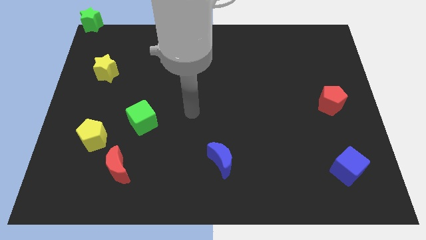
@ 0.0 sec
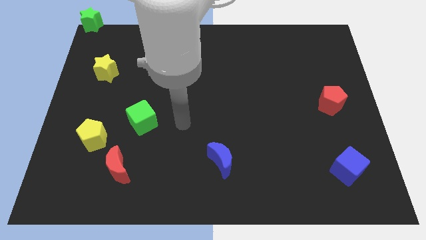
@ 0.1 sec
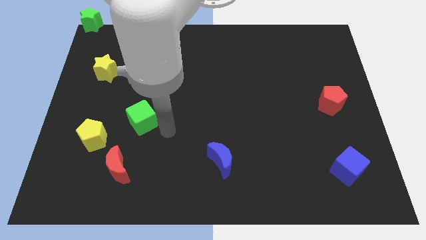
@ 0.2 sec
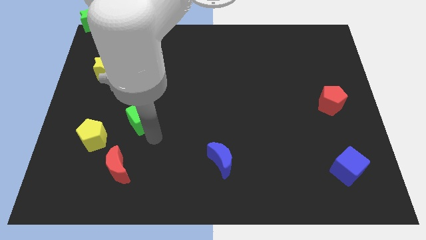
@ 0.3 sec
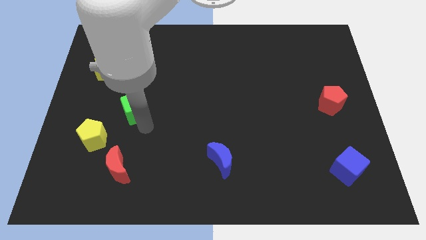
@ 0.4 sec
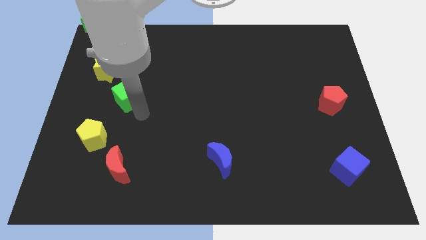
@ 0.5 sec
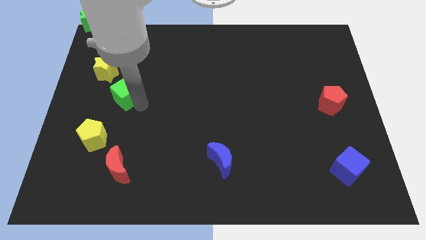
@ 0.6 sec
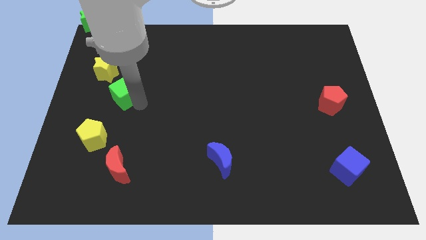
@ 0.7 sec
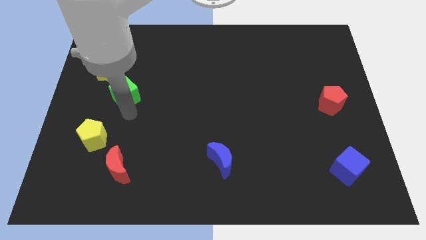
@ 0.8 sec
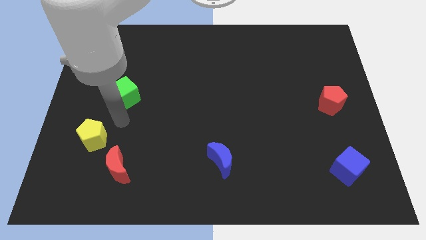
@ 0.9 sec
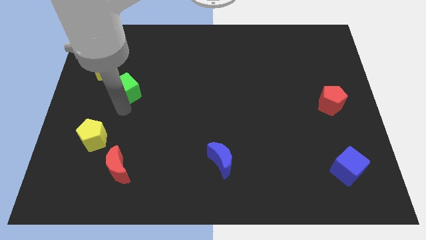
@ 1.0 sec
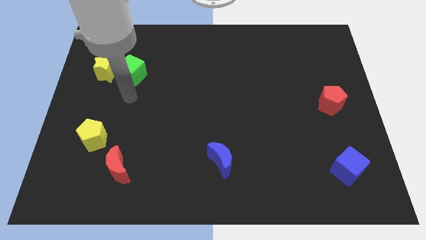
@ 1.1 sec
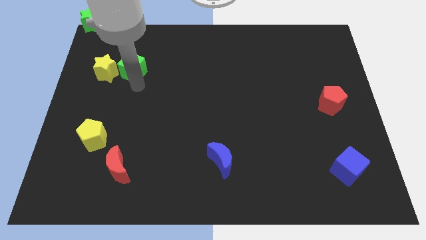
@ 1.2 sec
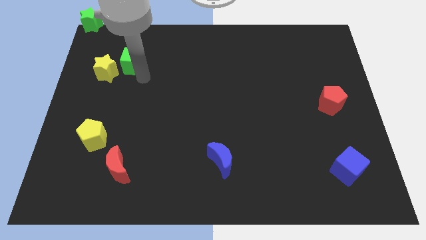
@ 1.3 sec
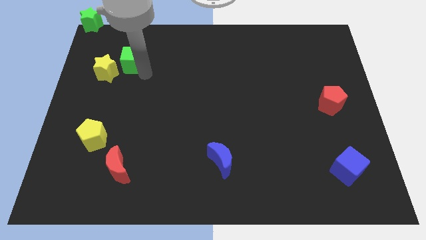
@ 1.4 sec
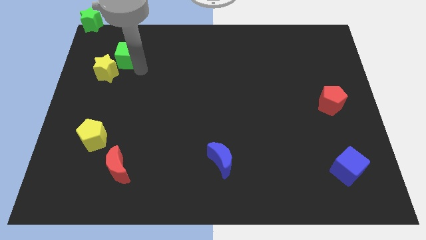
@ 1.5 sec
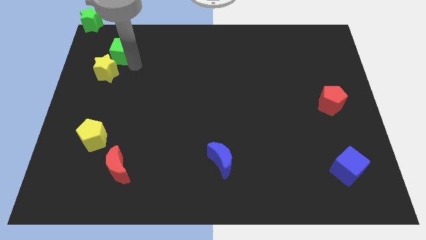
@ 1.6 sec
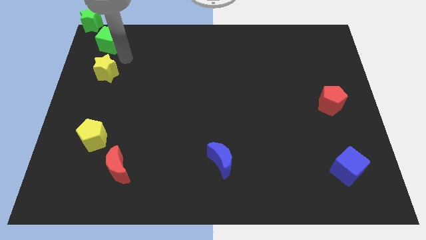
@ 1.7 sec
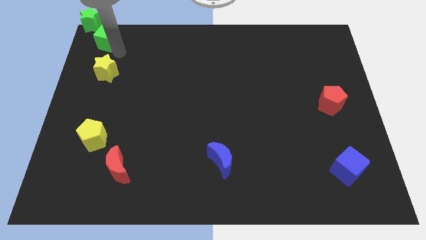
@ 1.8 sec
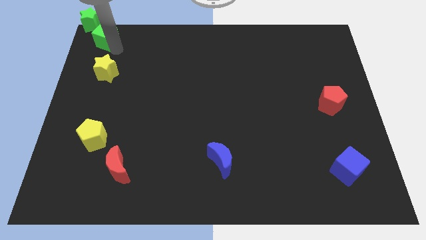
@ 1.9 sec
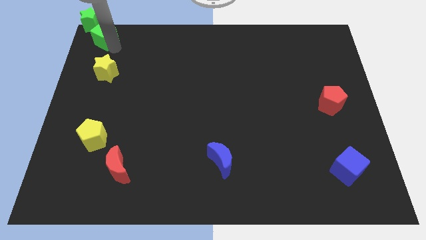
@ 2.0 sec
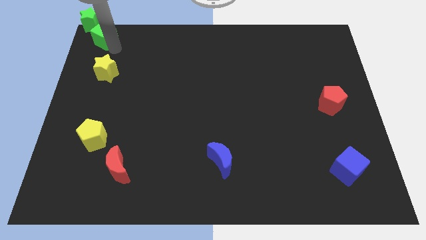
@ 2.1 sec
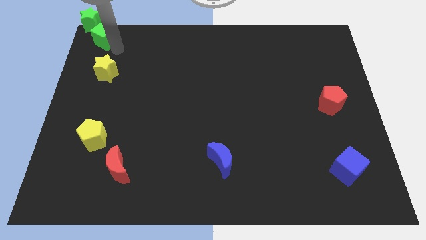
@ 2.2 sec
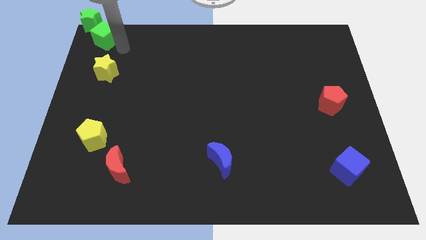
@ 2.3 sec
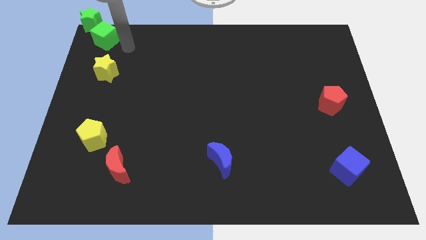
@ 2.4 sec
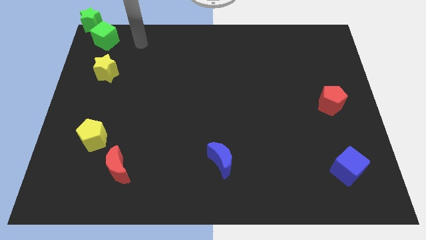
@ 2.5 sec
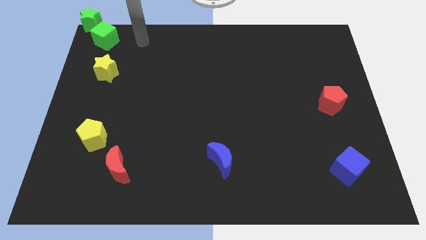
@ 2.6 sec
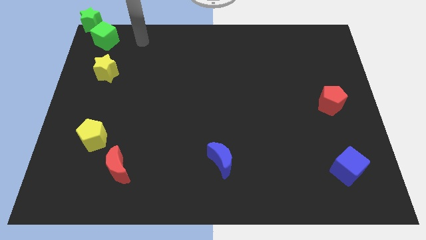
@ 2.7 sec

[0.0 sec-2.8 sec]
push the green cube towards the top left side of the board

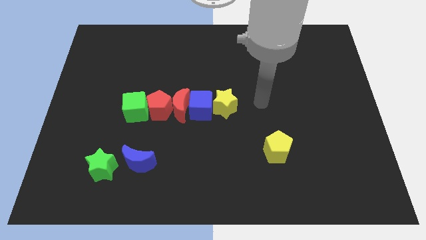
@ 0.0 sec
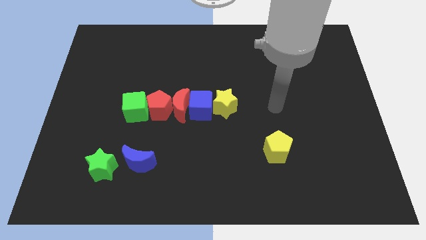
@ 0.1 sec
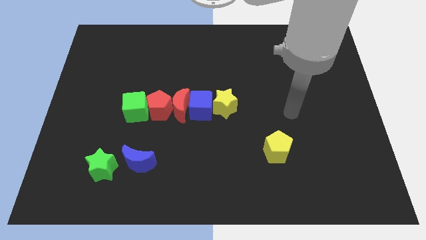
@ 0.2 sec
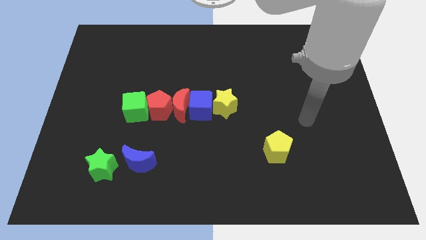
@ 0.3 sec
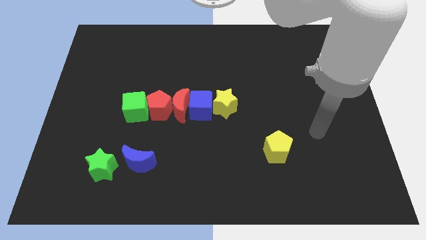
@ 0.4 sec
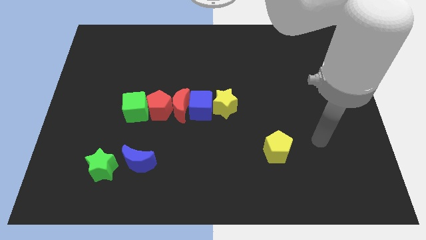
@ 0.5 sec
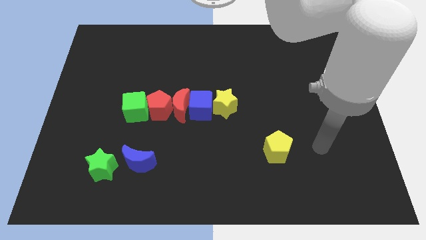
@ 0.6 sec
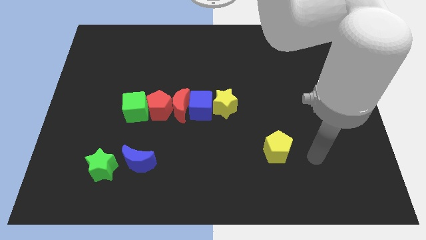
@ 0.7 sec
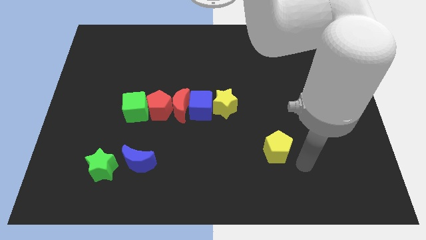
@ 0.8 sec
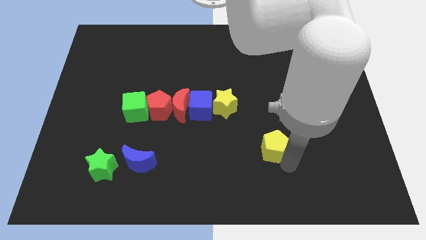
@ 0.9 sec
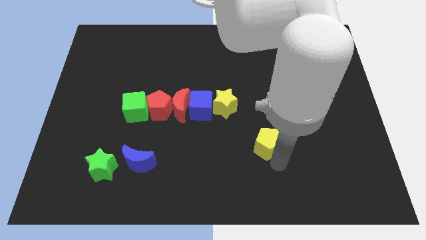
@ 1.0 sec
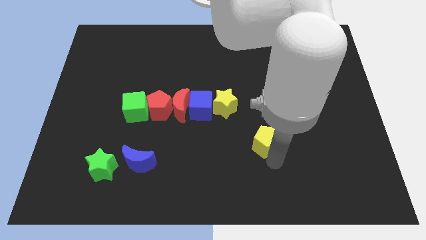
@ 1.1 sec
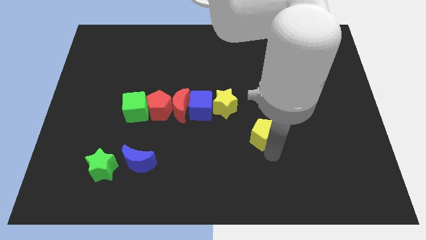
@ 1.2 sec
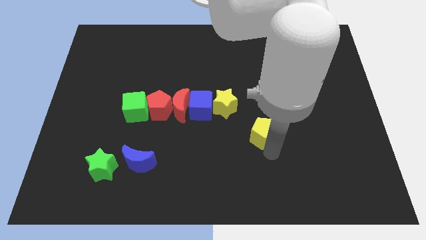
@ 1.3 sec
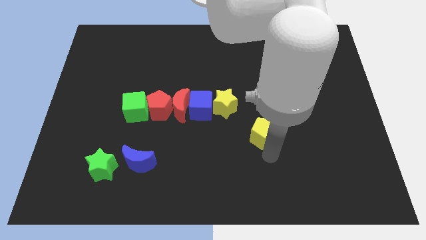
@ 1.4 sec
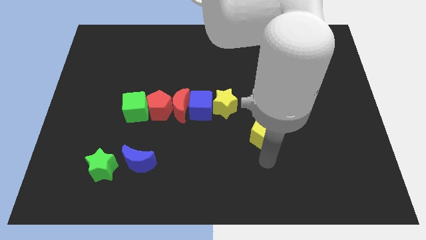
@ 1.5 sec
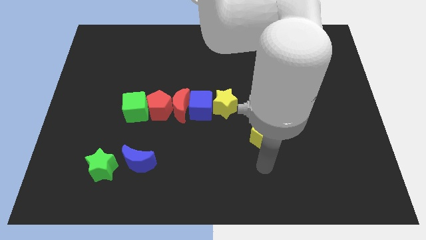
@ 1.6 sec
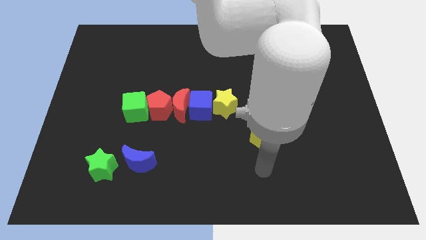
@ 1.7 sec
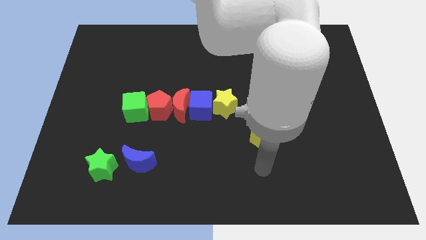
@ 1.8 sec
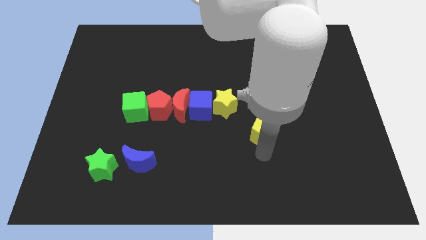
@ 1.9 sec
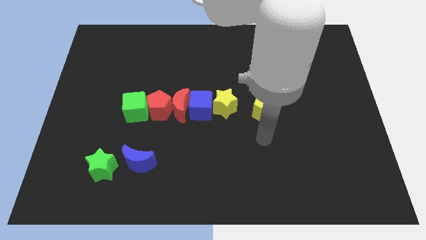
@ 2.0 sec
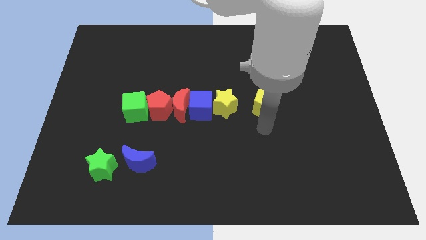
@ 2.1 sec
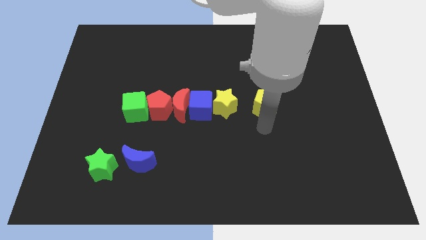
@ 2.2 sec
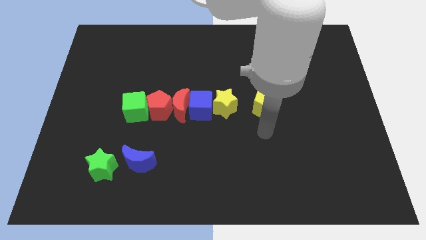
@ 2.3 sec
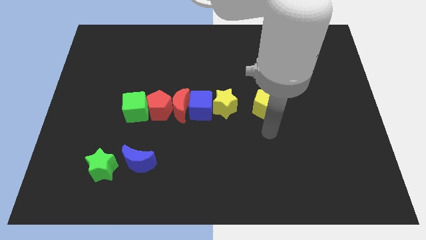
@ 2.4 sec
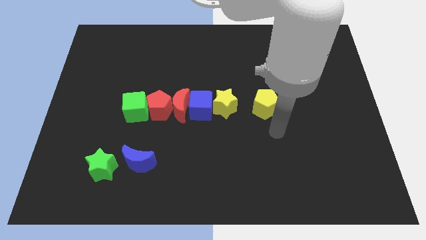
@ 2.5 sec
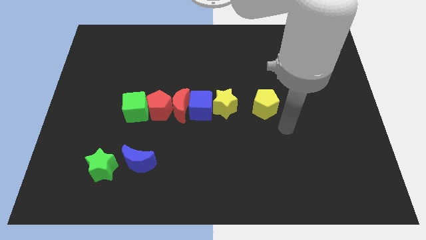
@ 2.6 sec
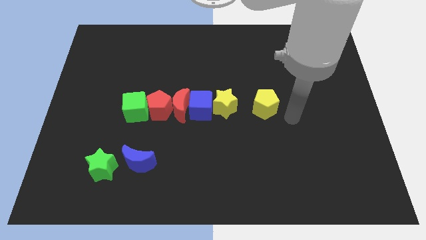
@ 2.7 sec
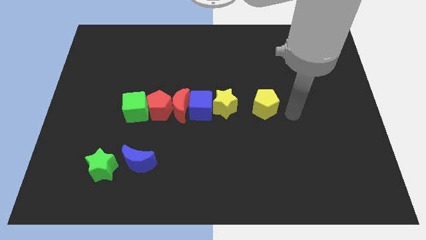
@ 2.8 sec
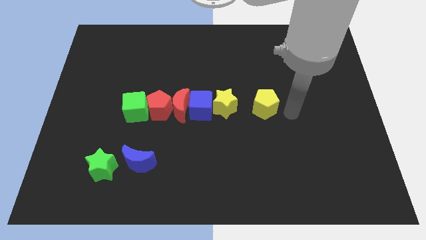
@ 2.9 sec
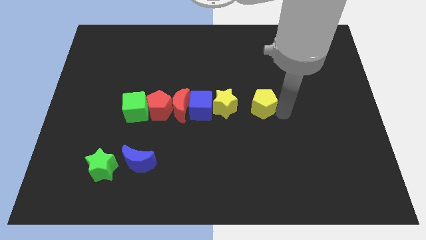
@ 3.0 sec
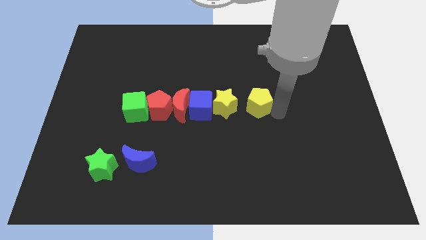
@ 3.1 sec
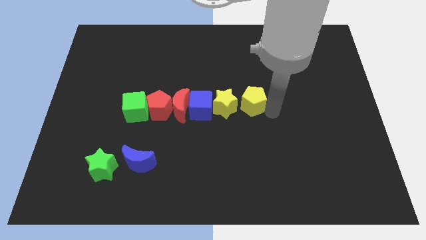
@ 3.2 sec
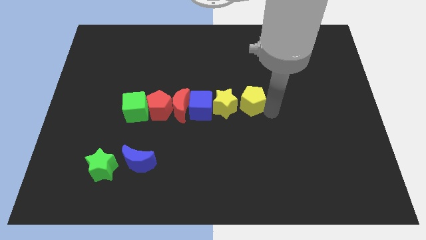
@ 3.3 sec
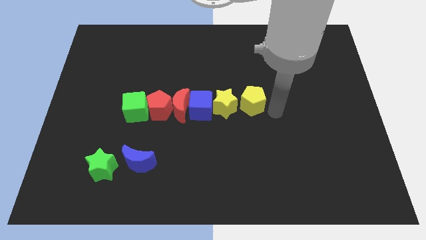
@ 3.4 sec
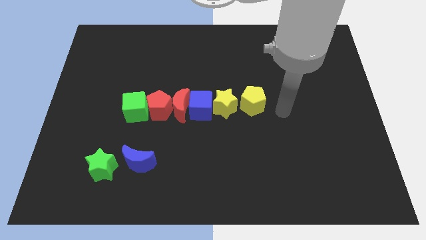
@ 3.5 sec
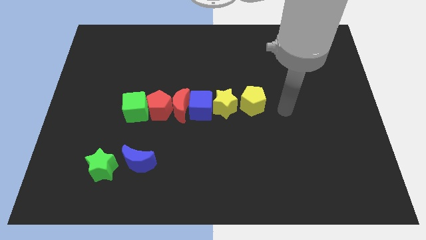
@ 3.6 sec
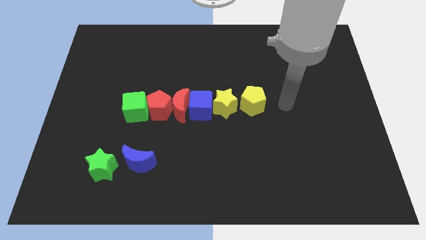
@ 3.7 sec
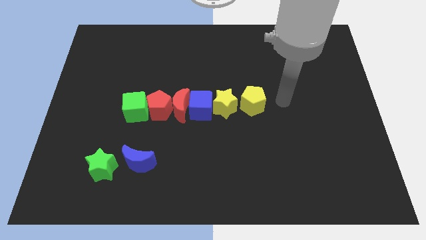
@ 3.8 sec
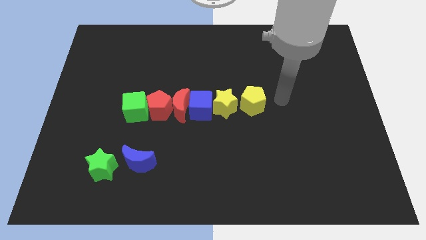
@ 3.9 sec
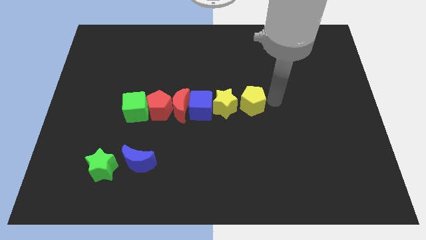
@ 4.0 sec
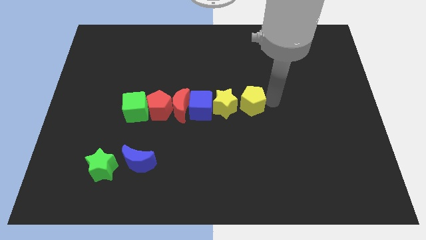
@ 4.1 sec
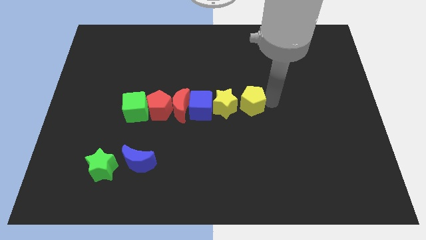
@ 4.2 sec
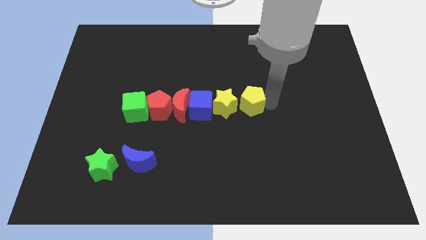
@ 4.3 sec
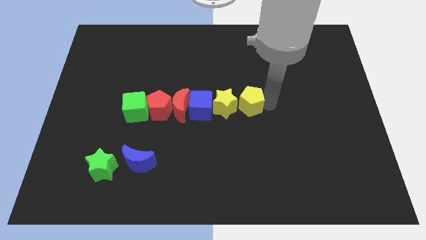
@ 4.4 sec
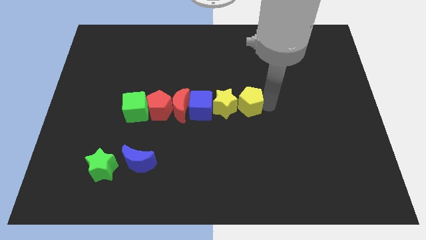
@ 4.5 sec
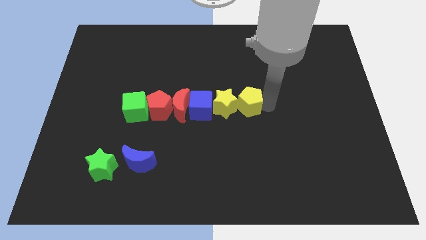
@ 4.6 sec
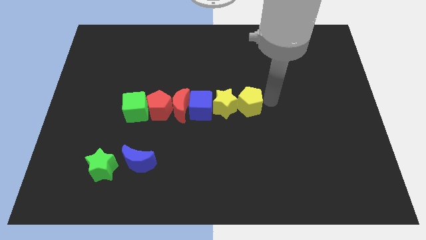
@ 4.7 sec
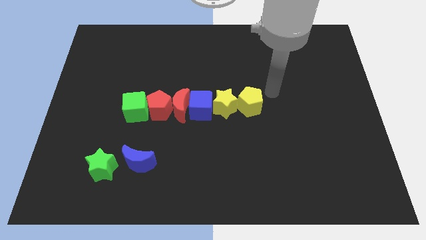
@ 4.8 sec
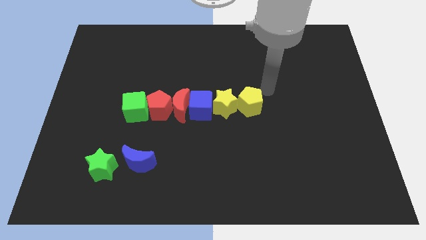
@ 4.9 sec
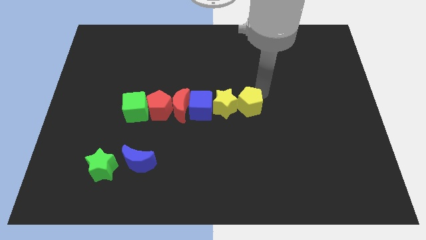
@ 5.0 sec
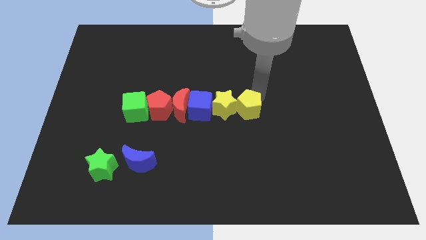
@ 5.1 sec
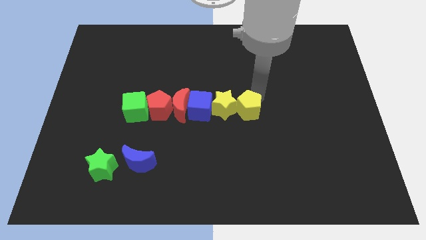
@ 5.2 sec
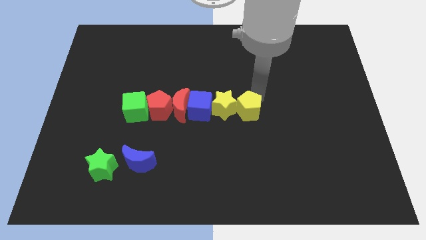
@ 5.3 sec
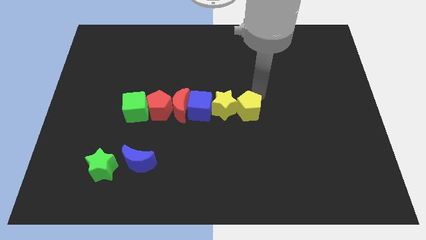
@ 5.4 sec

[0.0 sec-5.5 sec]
move the yellow pentagon to the right side of the yellow star

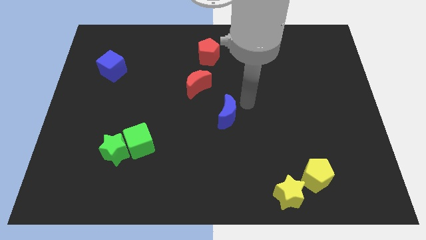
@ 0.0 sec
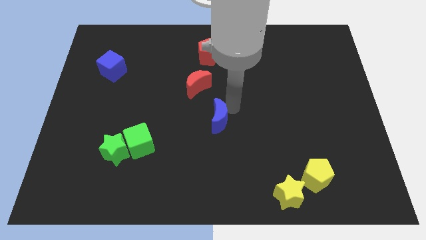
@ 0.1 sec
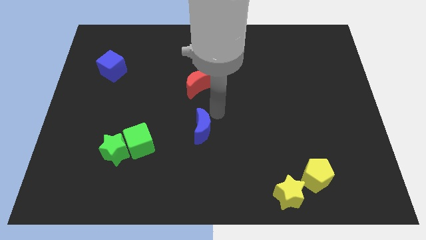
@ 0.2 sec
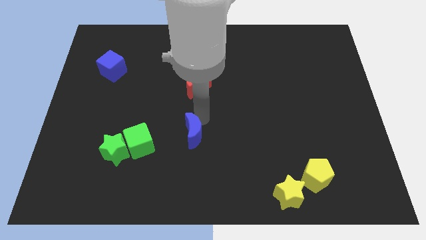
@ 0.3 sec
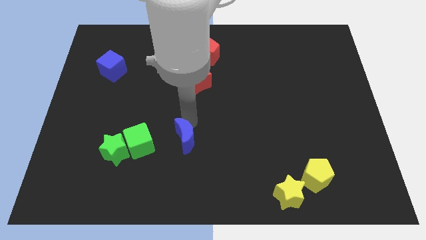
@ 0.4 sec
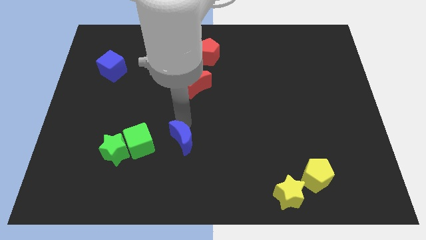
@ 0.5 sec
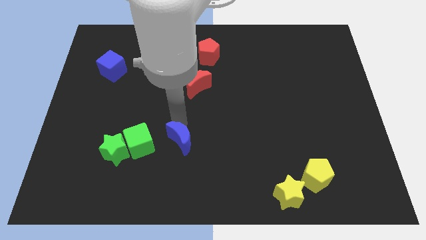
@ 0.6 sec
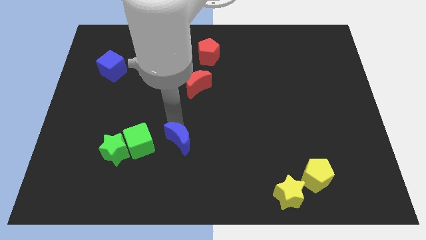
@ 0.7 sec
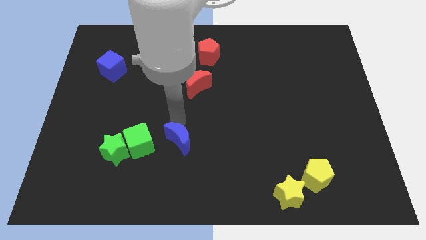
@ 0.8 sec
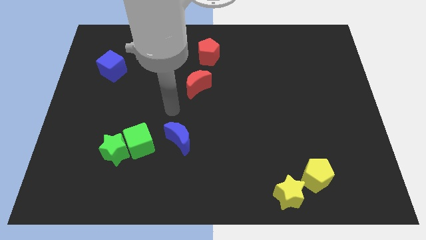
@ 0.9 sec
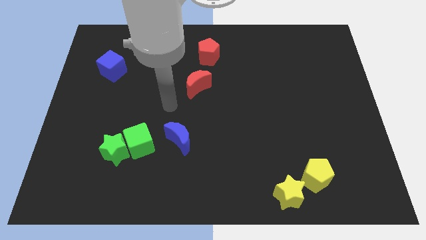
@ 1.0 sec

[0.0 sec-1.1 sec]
move blue moon close to green cube
